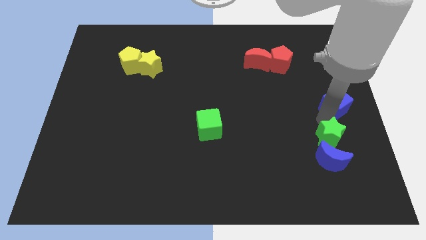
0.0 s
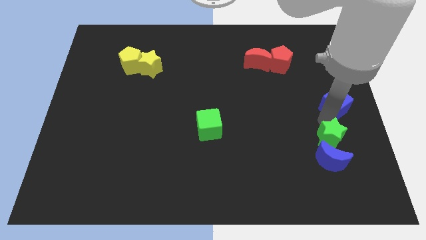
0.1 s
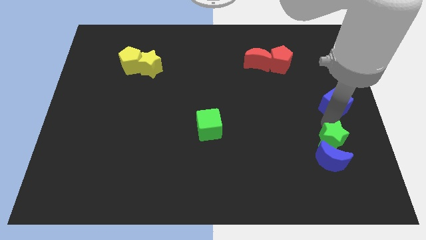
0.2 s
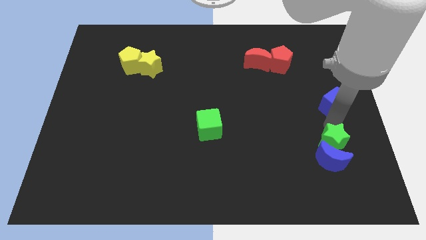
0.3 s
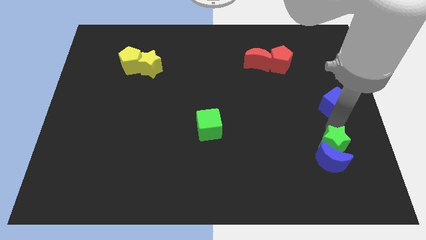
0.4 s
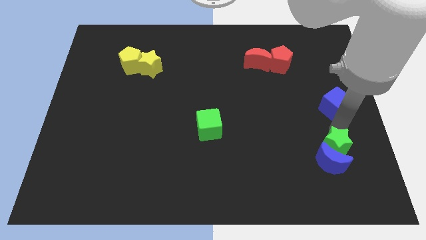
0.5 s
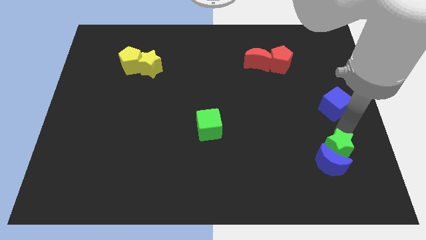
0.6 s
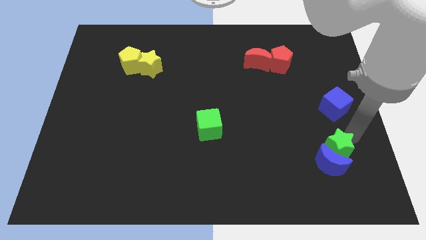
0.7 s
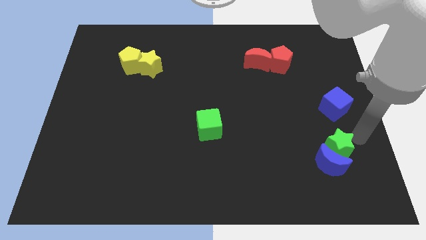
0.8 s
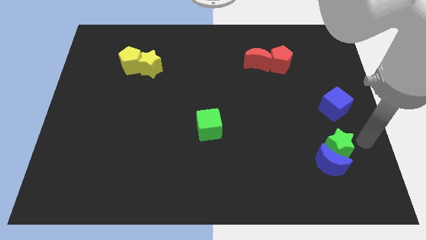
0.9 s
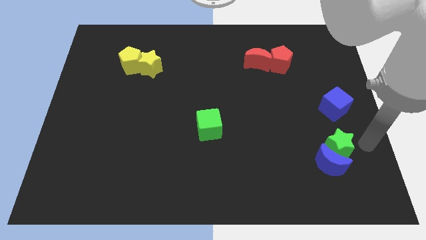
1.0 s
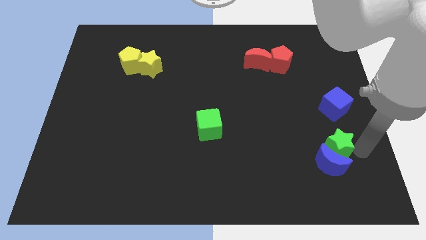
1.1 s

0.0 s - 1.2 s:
move green and blue blocks apart

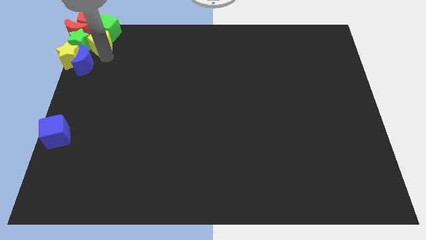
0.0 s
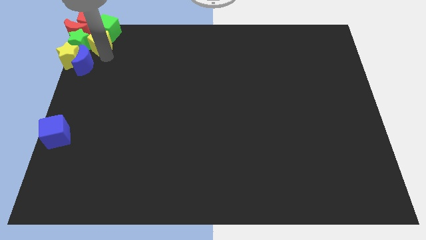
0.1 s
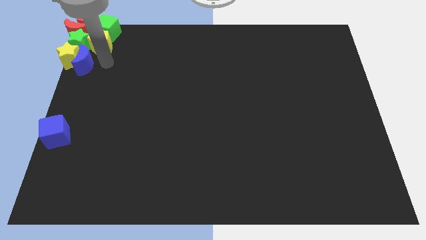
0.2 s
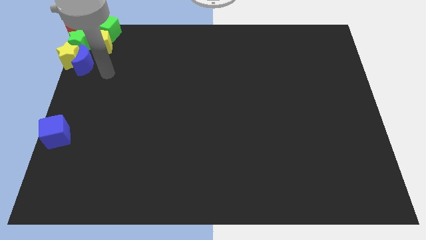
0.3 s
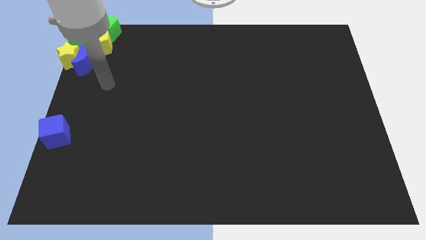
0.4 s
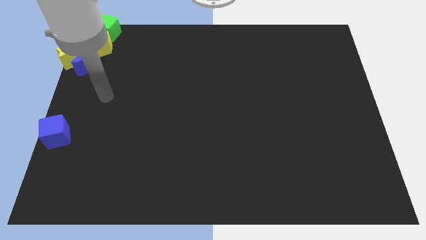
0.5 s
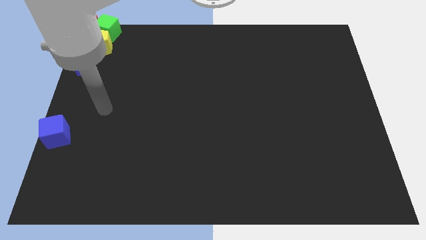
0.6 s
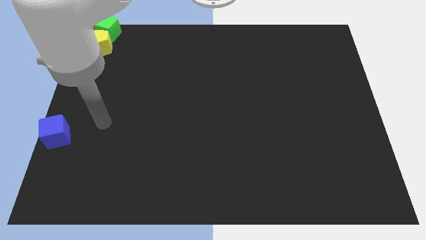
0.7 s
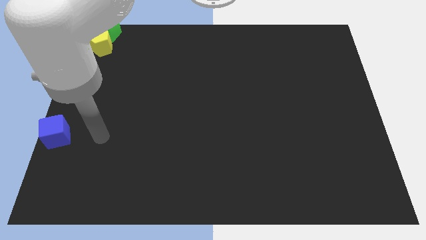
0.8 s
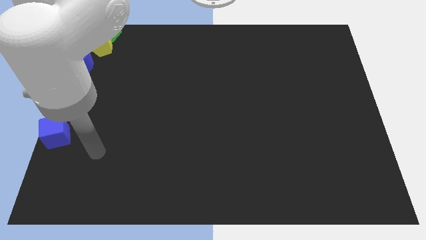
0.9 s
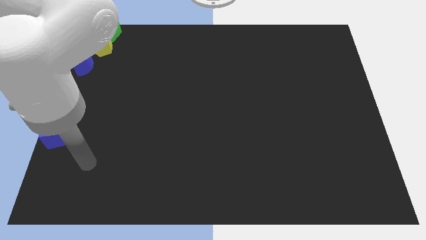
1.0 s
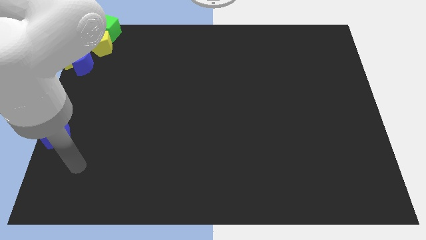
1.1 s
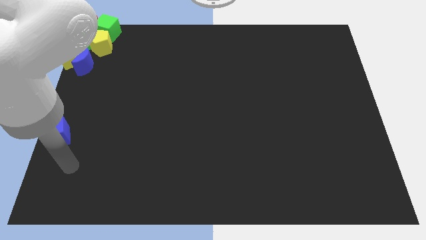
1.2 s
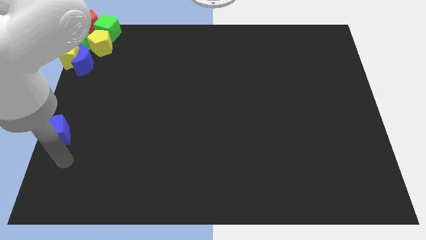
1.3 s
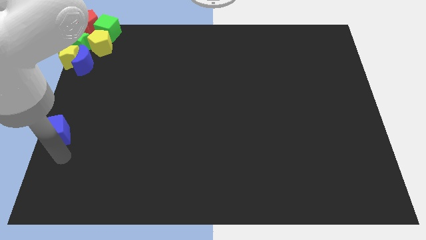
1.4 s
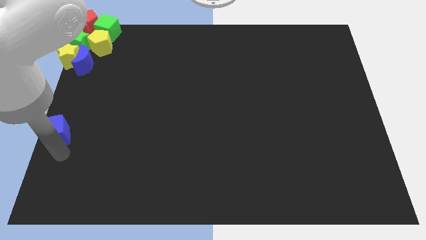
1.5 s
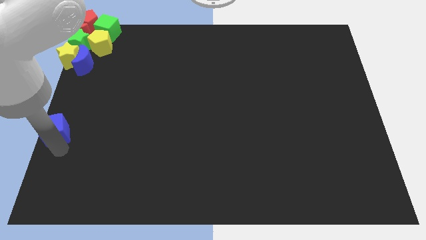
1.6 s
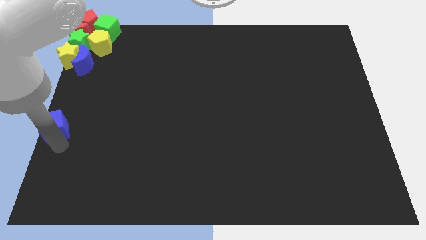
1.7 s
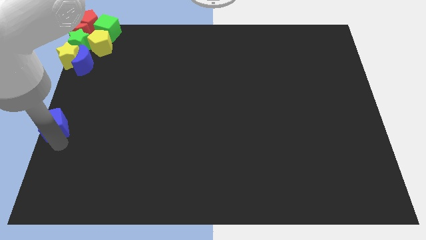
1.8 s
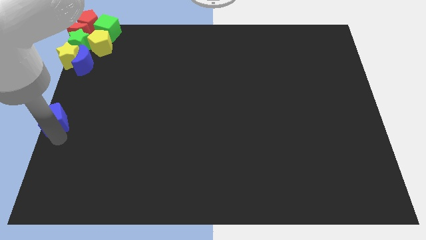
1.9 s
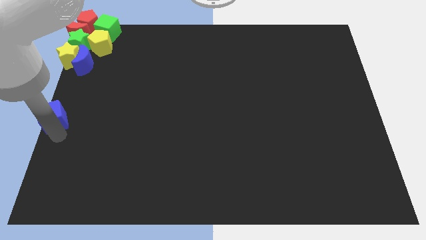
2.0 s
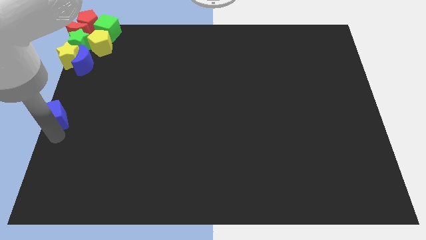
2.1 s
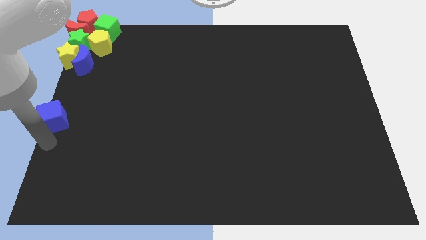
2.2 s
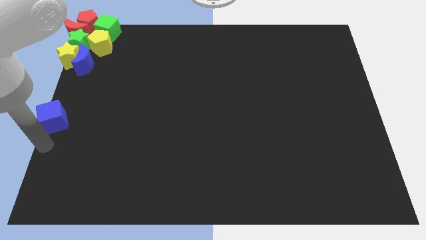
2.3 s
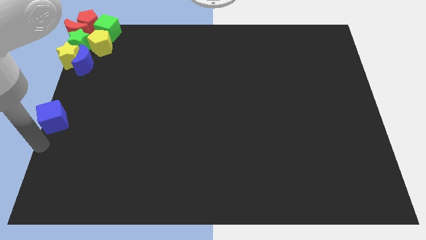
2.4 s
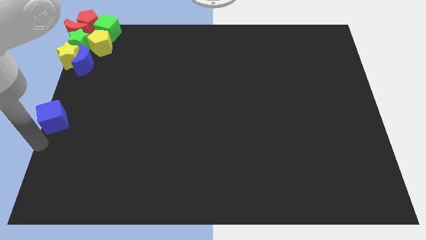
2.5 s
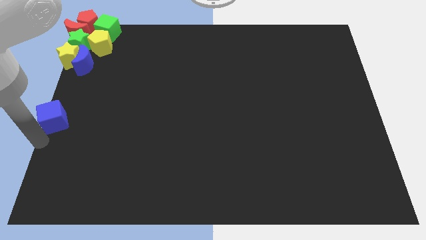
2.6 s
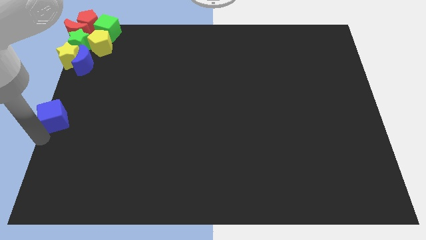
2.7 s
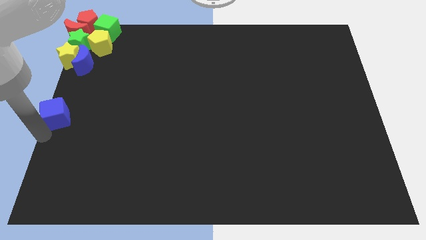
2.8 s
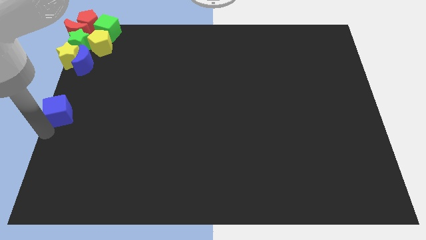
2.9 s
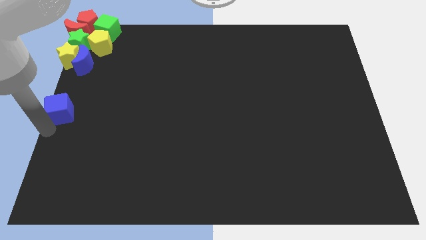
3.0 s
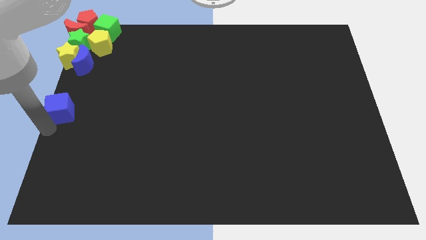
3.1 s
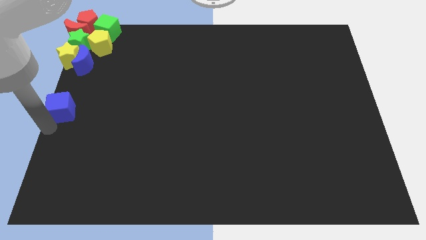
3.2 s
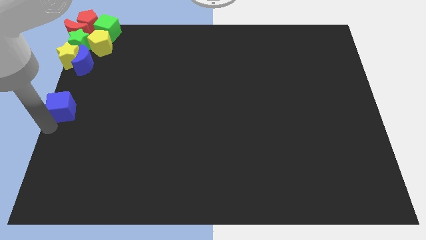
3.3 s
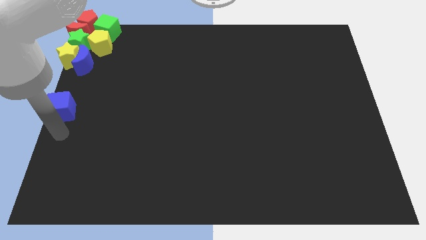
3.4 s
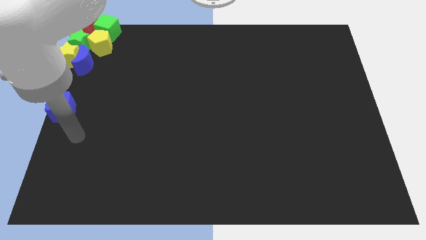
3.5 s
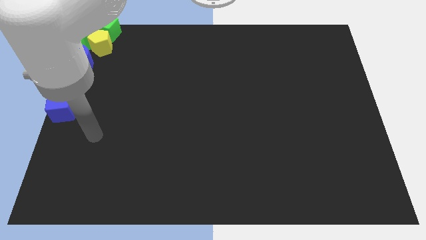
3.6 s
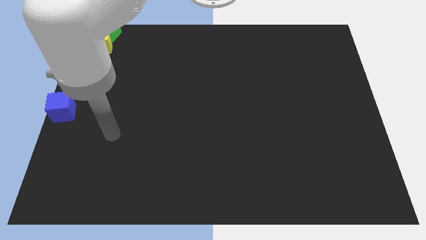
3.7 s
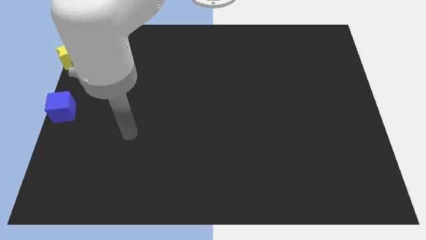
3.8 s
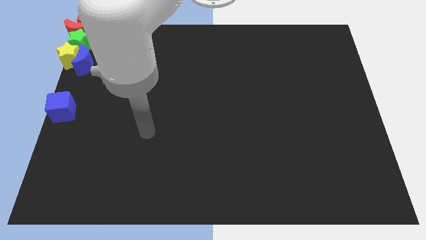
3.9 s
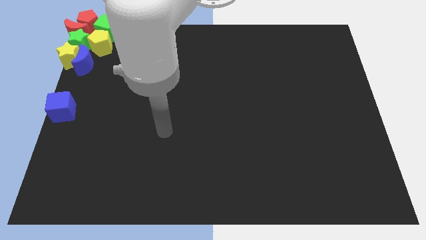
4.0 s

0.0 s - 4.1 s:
slightly move the blue cube towards the bottom of the yellow star

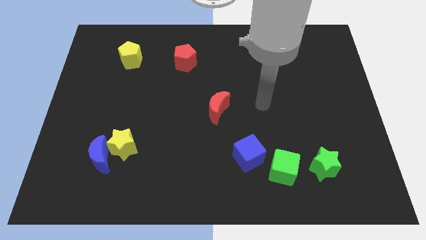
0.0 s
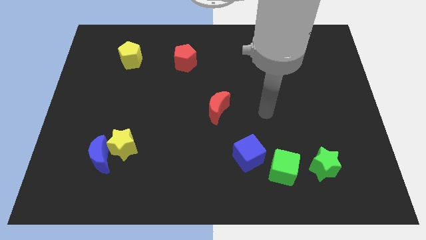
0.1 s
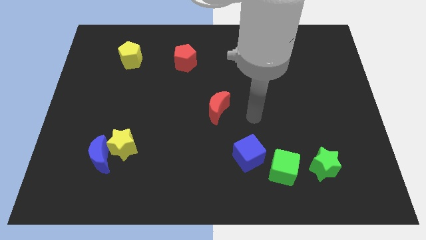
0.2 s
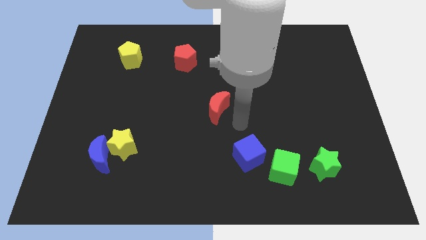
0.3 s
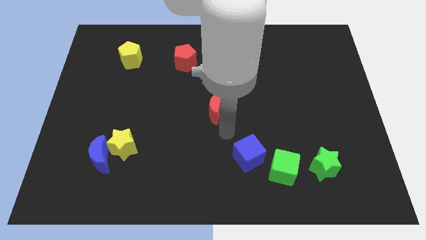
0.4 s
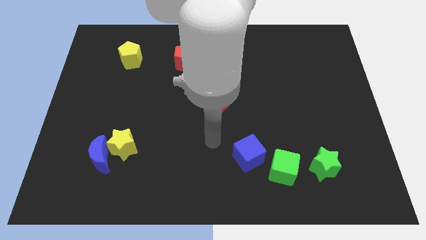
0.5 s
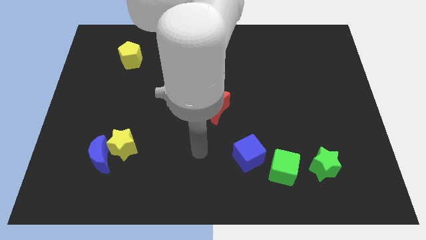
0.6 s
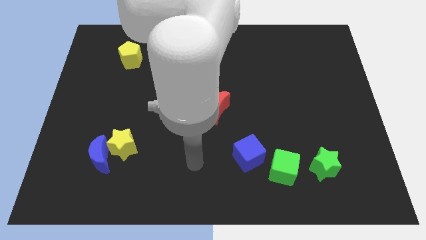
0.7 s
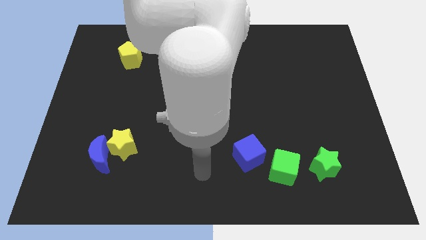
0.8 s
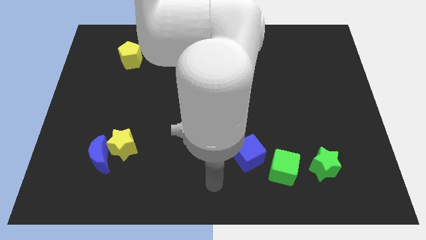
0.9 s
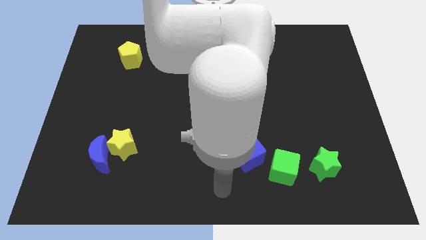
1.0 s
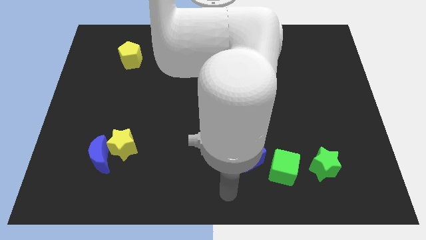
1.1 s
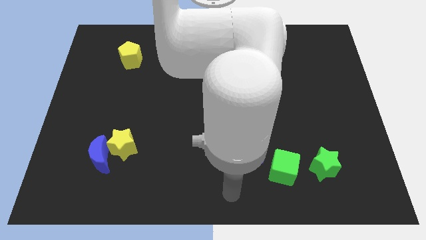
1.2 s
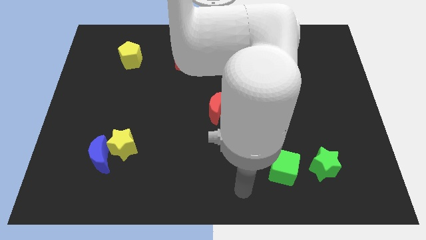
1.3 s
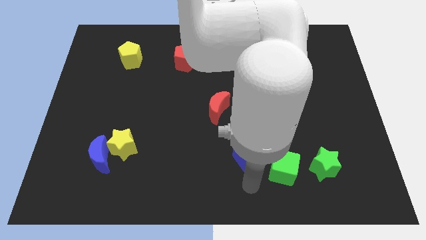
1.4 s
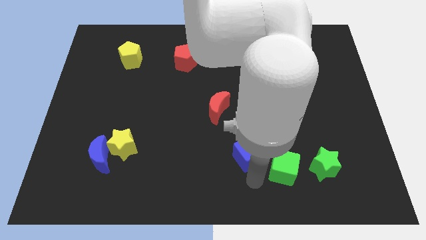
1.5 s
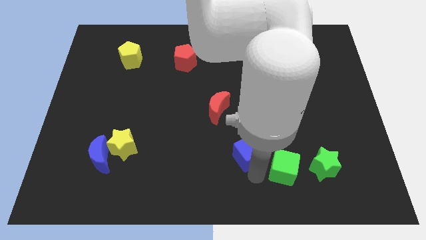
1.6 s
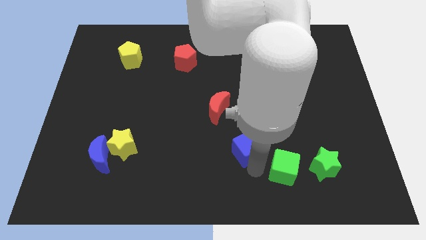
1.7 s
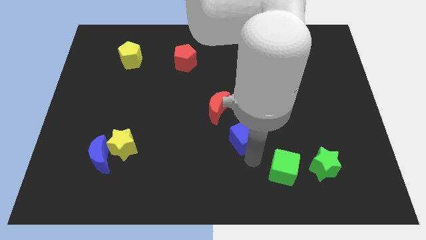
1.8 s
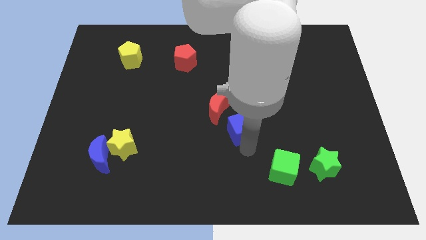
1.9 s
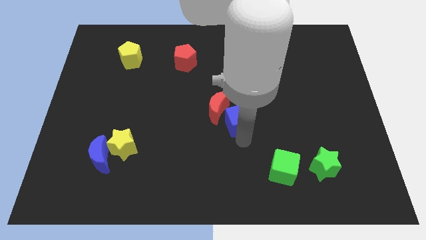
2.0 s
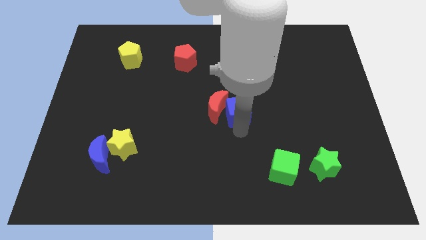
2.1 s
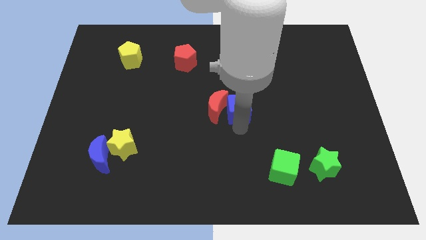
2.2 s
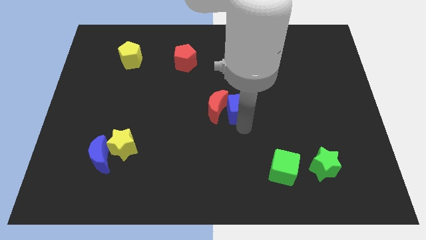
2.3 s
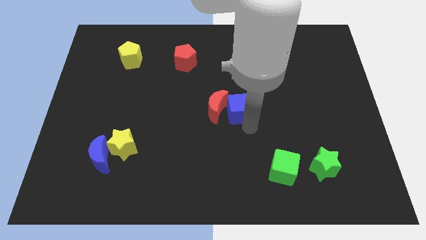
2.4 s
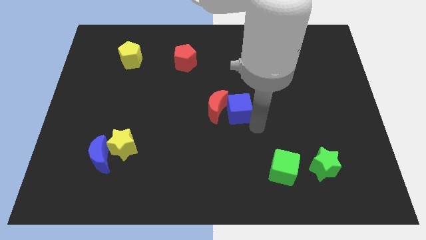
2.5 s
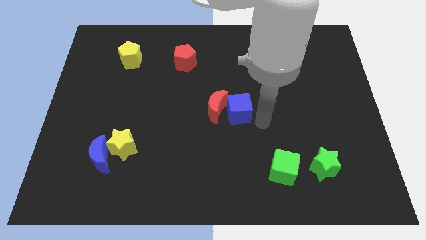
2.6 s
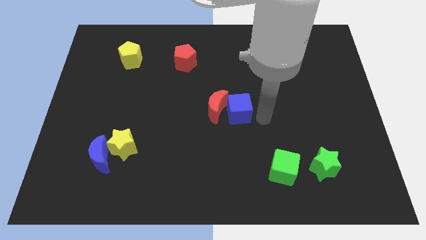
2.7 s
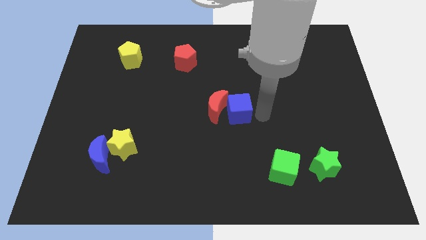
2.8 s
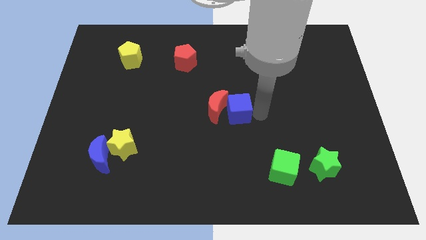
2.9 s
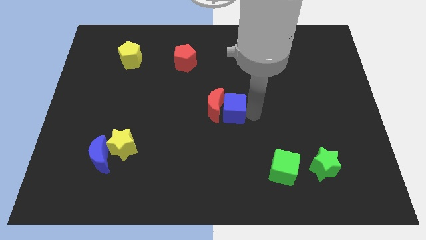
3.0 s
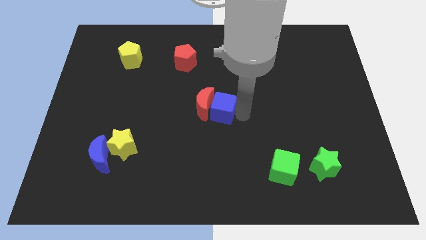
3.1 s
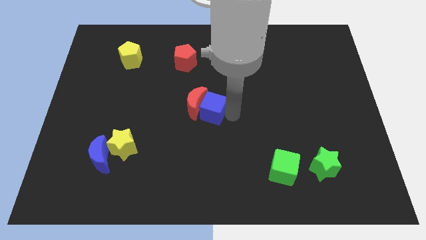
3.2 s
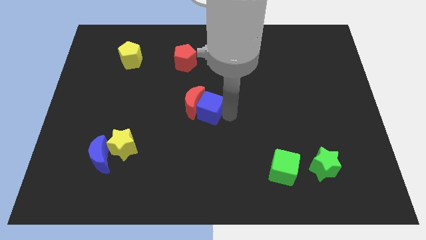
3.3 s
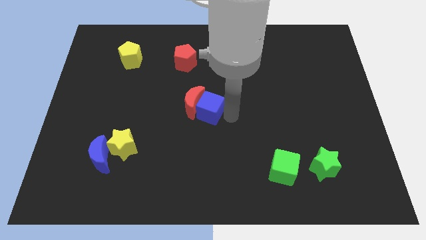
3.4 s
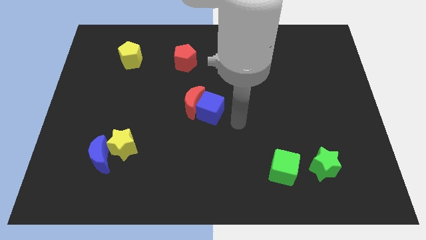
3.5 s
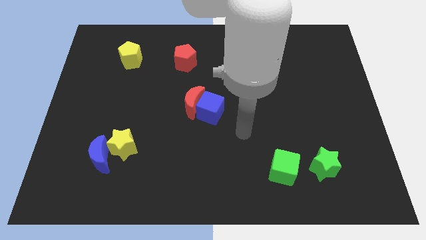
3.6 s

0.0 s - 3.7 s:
move the blue cube away from the left side of green cube

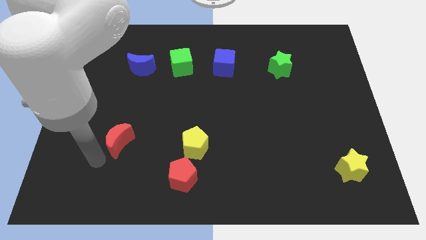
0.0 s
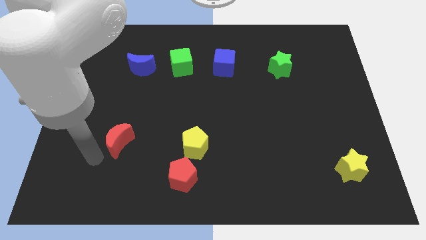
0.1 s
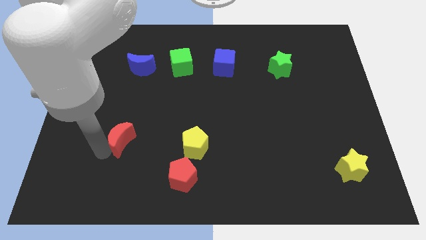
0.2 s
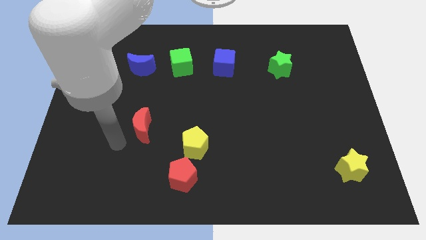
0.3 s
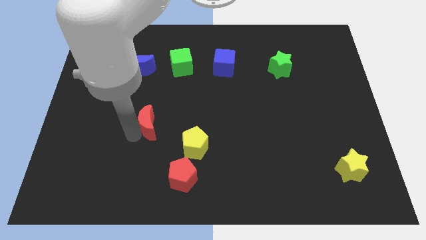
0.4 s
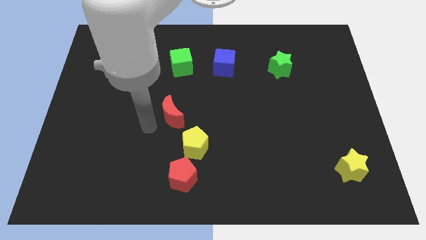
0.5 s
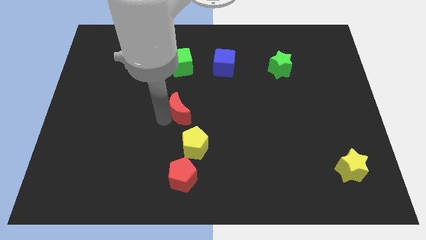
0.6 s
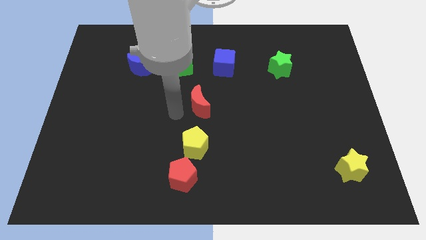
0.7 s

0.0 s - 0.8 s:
push red crescent above yellow pentagon
